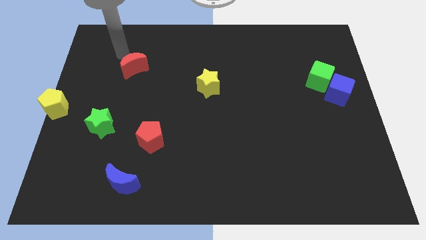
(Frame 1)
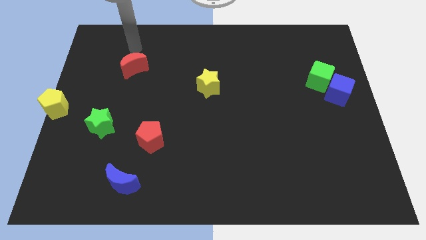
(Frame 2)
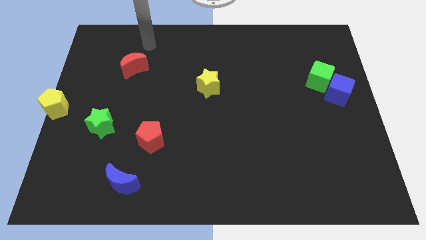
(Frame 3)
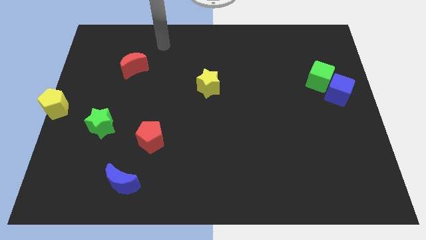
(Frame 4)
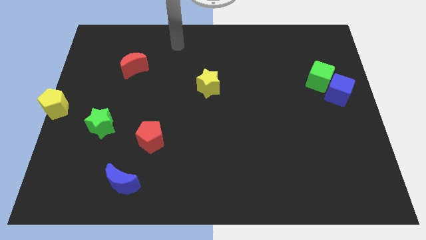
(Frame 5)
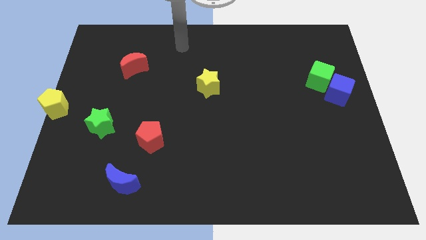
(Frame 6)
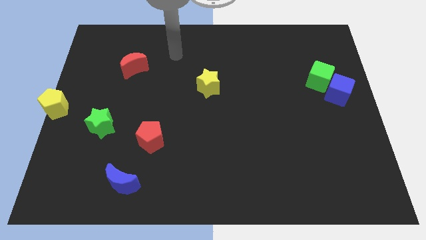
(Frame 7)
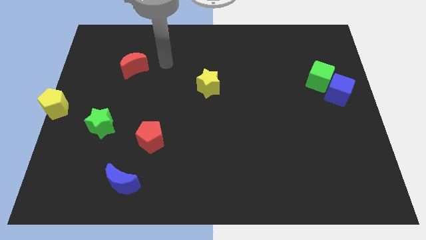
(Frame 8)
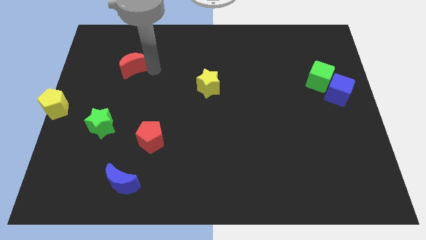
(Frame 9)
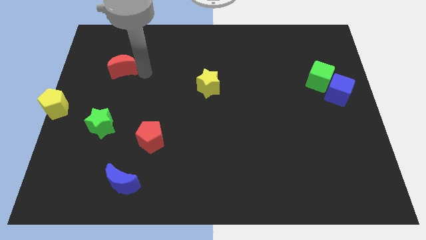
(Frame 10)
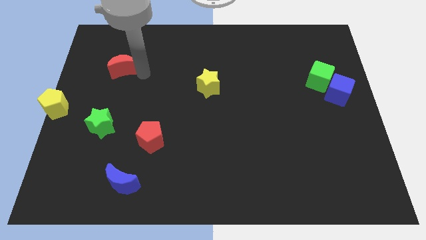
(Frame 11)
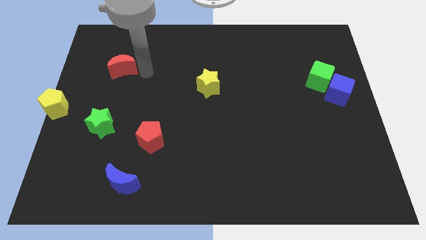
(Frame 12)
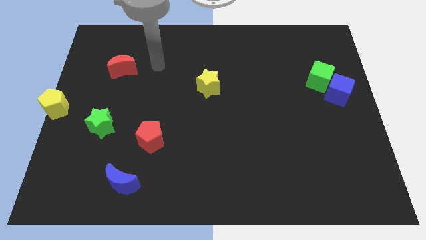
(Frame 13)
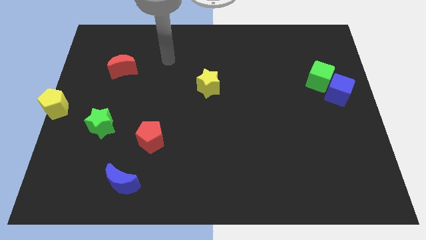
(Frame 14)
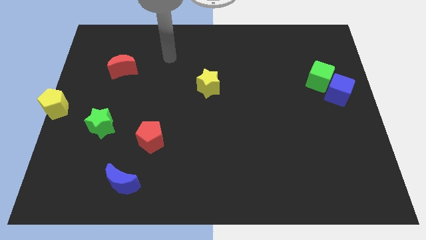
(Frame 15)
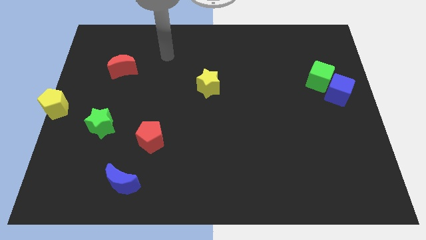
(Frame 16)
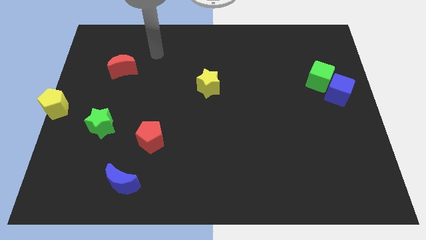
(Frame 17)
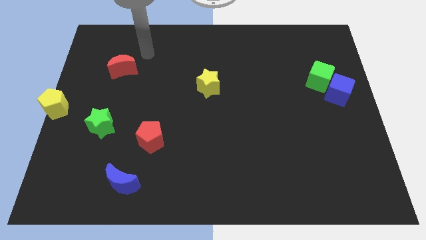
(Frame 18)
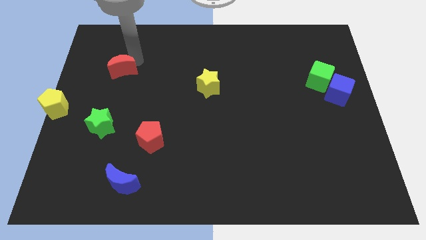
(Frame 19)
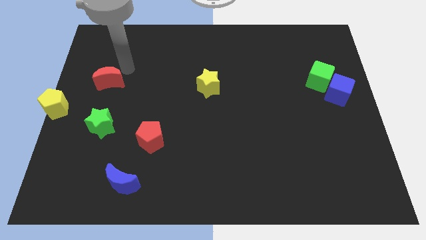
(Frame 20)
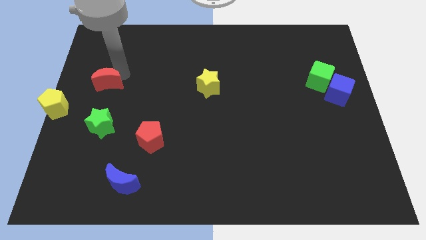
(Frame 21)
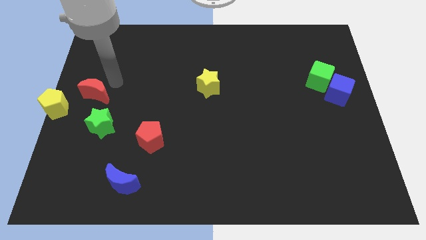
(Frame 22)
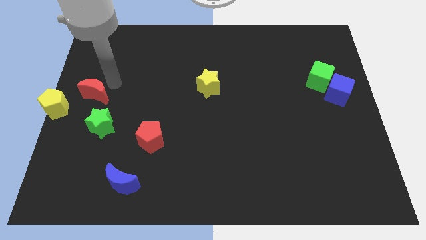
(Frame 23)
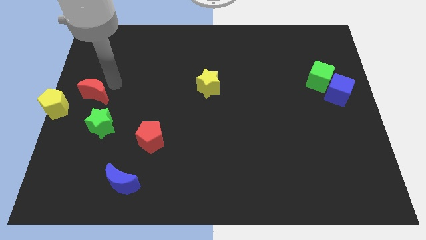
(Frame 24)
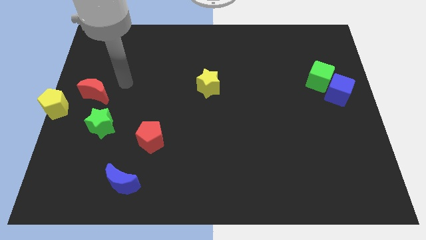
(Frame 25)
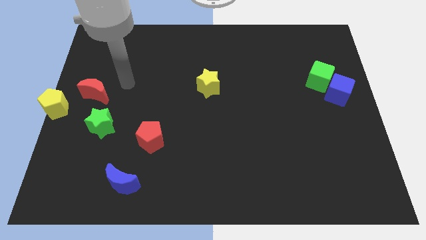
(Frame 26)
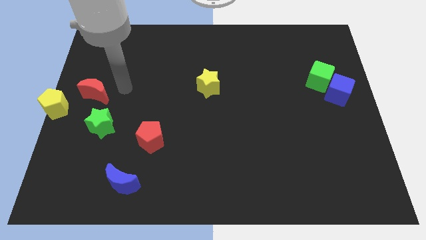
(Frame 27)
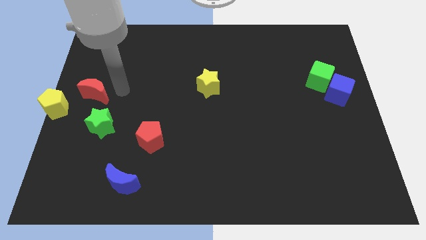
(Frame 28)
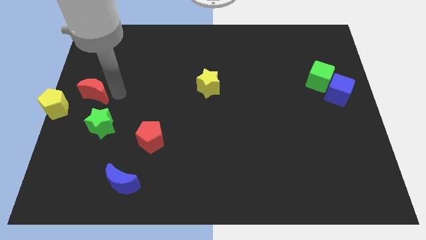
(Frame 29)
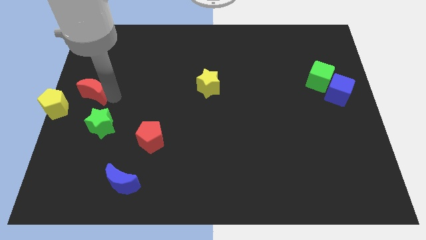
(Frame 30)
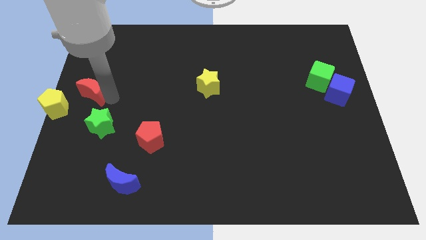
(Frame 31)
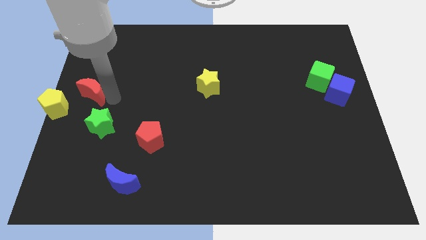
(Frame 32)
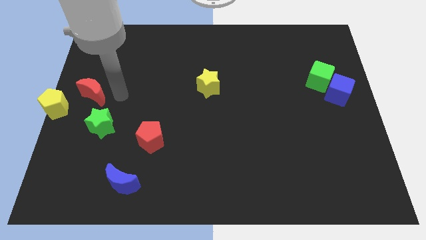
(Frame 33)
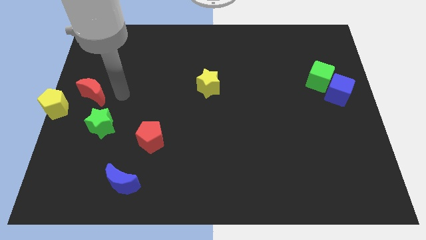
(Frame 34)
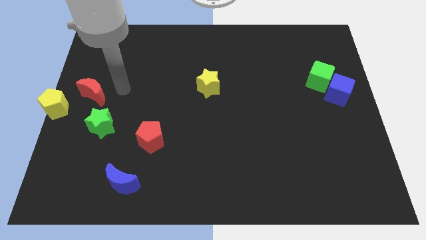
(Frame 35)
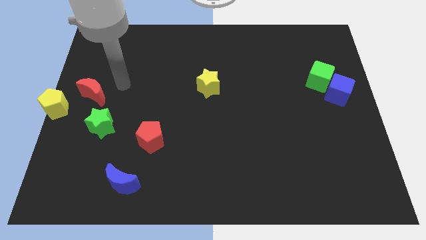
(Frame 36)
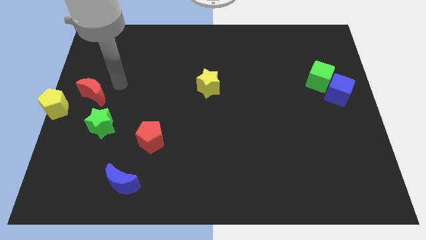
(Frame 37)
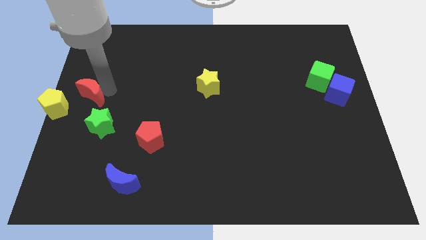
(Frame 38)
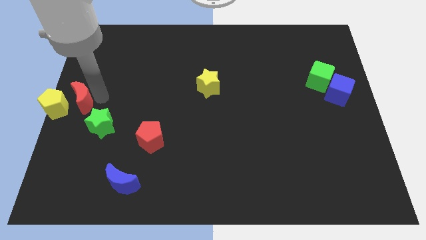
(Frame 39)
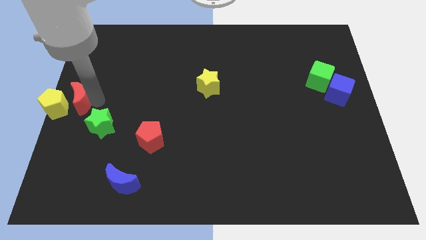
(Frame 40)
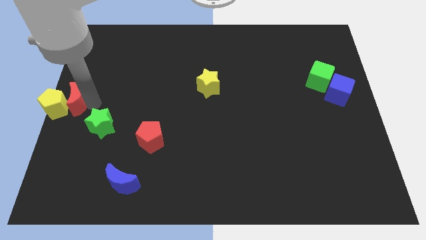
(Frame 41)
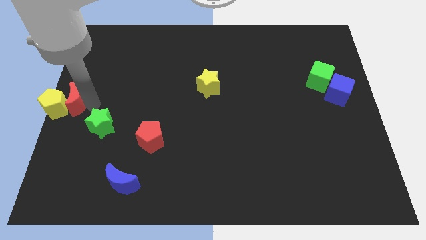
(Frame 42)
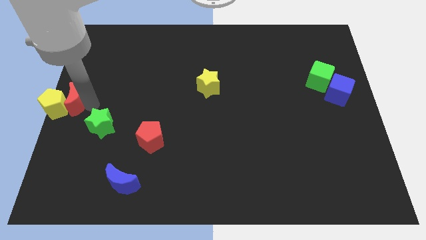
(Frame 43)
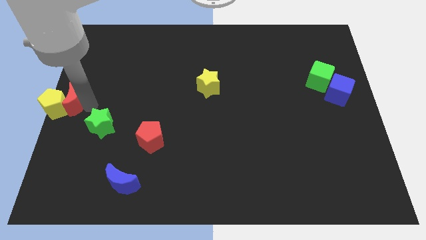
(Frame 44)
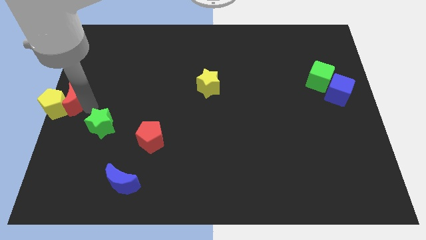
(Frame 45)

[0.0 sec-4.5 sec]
slide the red crescent near to the right side of the yellow pentagon

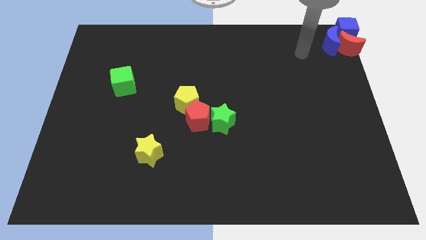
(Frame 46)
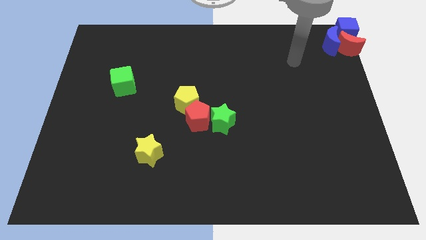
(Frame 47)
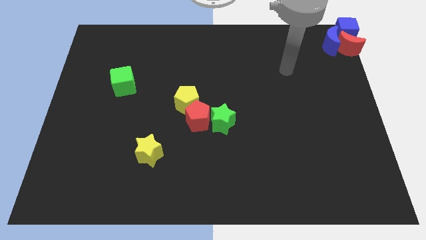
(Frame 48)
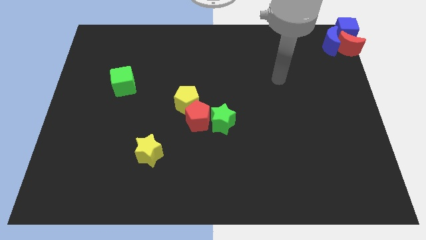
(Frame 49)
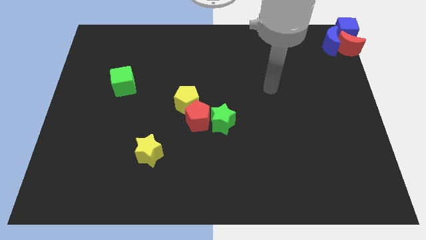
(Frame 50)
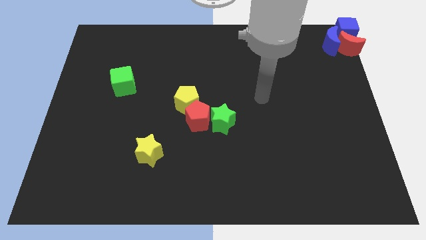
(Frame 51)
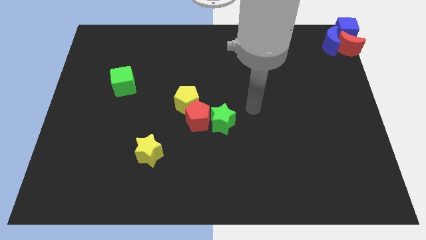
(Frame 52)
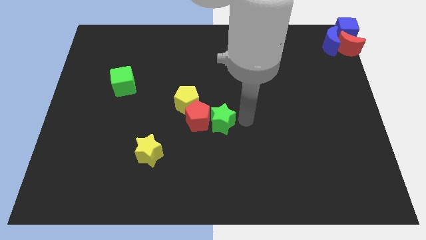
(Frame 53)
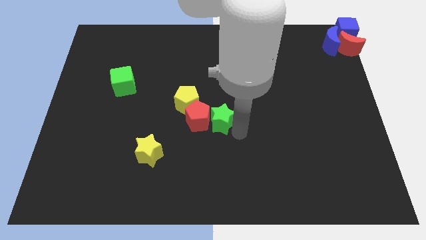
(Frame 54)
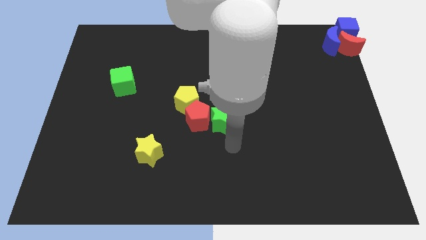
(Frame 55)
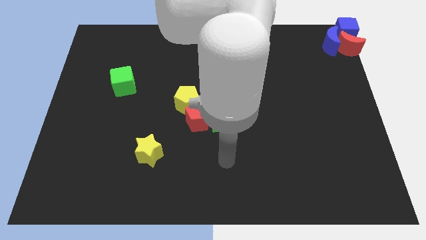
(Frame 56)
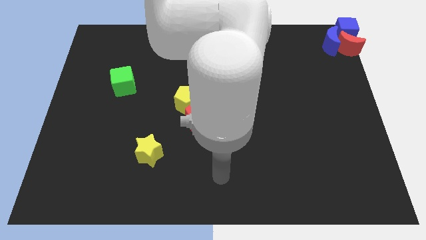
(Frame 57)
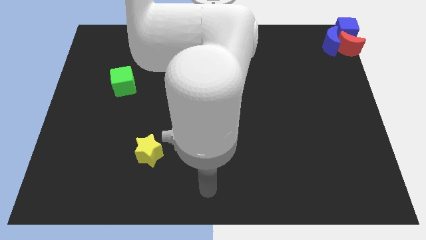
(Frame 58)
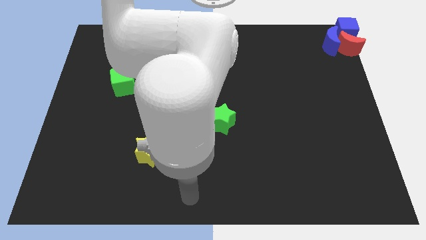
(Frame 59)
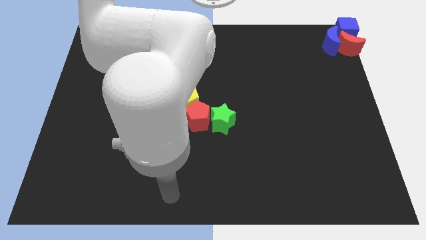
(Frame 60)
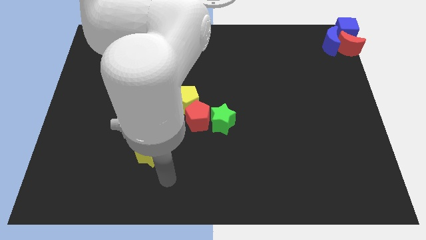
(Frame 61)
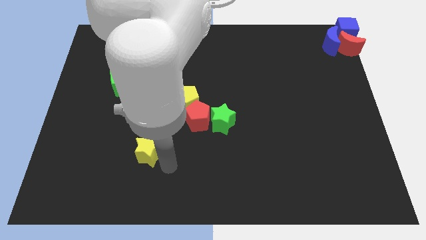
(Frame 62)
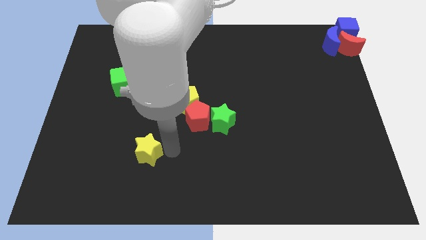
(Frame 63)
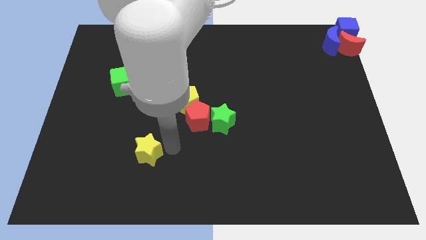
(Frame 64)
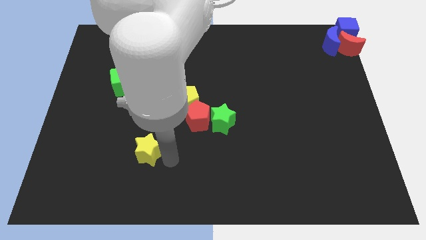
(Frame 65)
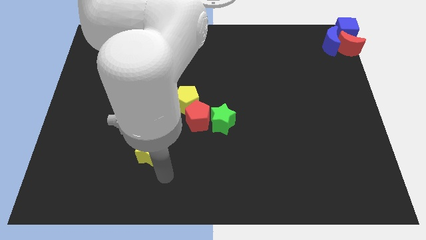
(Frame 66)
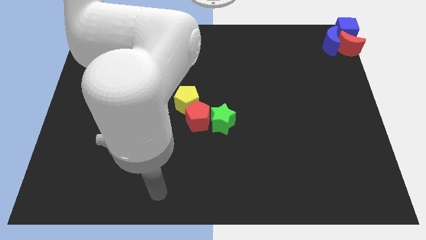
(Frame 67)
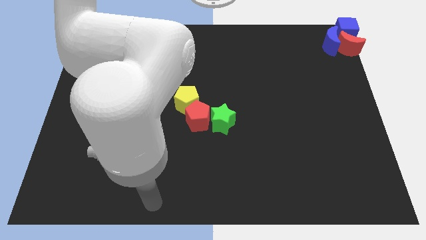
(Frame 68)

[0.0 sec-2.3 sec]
move your arm towards the yellow star

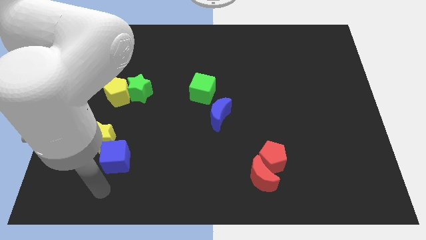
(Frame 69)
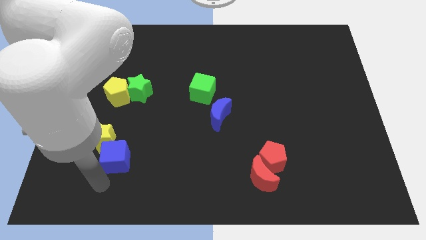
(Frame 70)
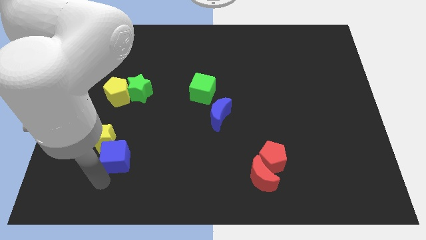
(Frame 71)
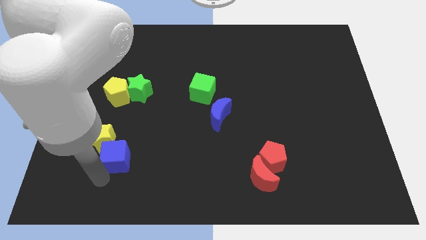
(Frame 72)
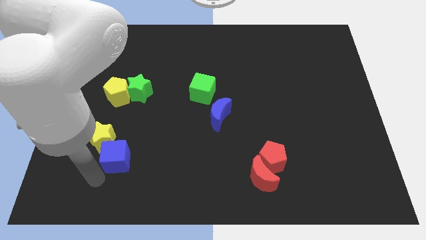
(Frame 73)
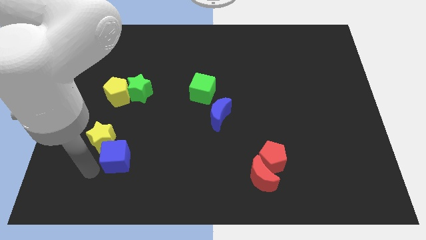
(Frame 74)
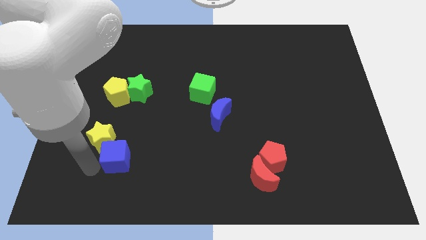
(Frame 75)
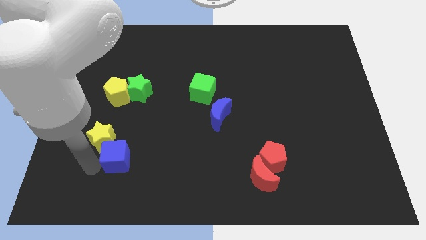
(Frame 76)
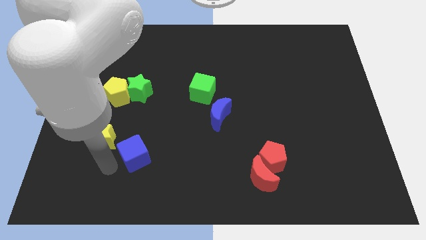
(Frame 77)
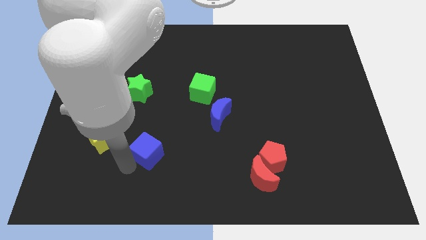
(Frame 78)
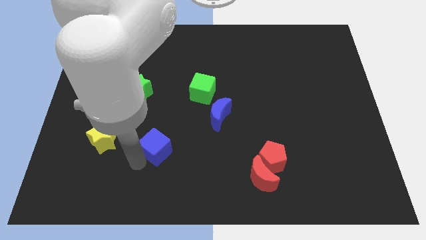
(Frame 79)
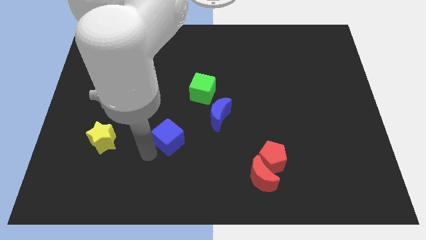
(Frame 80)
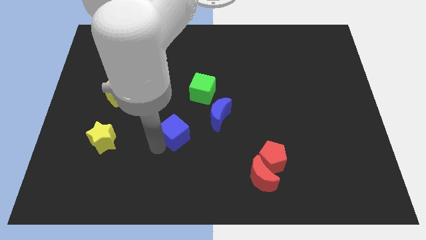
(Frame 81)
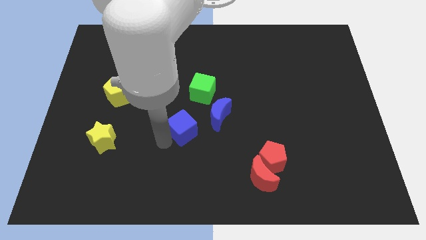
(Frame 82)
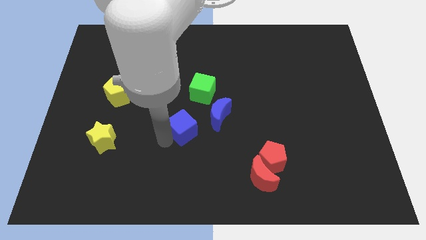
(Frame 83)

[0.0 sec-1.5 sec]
separate the blue cube from the yellow star

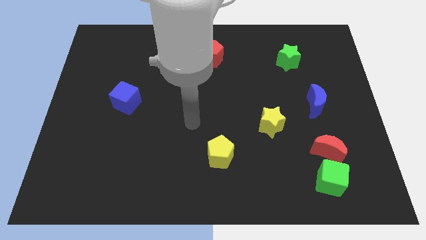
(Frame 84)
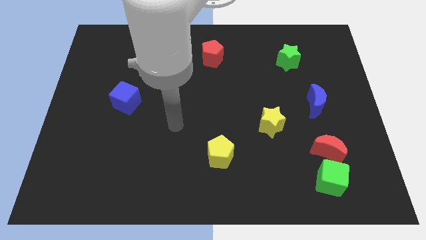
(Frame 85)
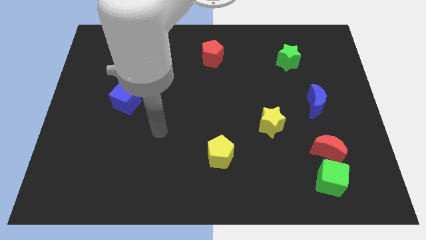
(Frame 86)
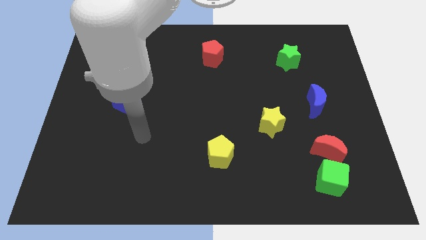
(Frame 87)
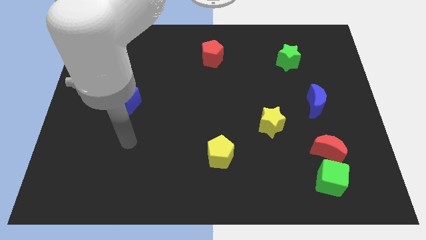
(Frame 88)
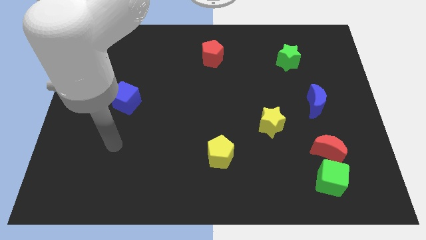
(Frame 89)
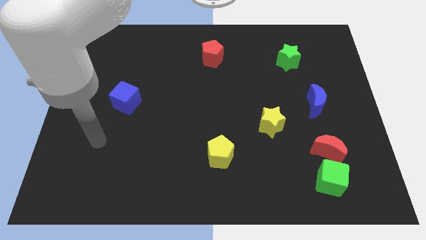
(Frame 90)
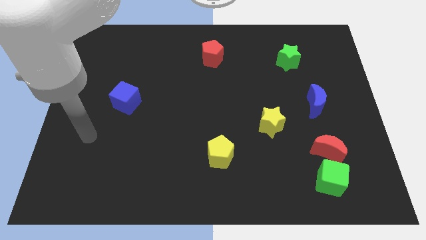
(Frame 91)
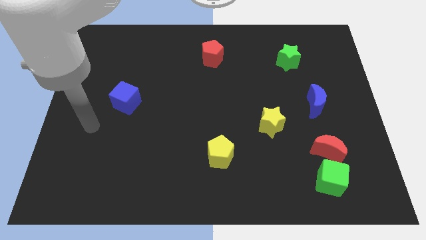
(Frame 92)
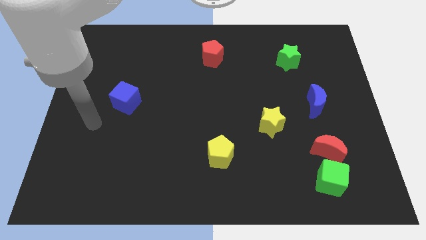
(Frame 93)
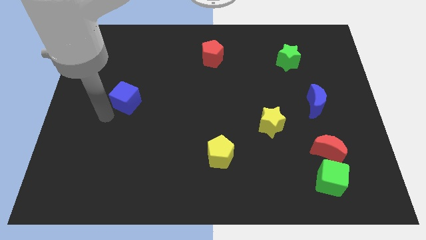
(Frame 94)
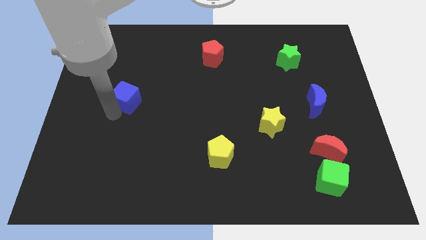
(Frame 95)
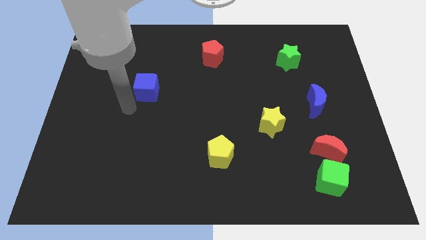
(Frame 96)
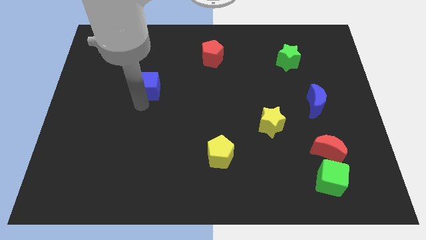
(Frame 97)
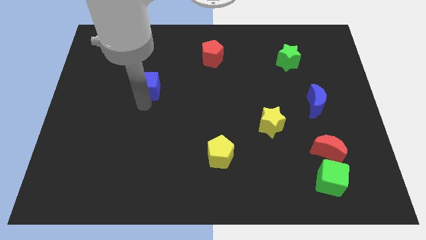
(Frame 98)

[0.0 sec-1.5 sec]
push the blue cube towards the red pentagon
